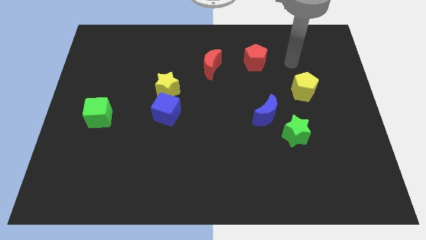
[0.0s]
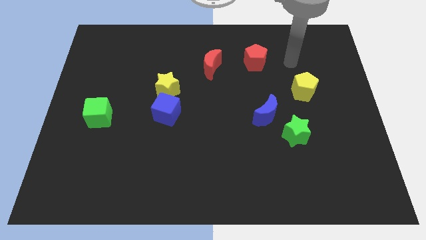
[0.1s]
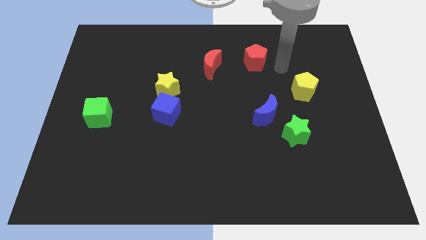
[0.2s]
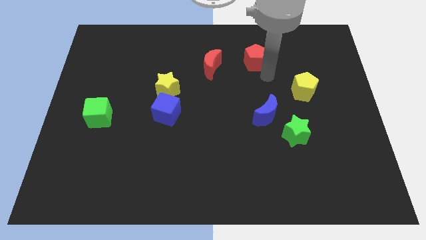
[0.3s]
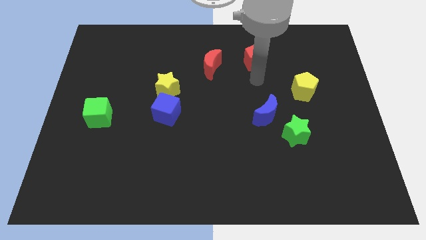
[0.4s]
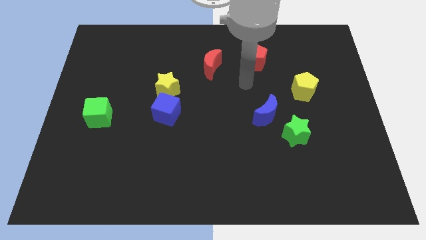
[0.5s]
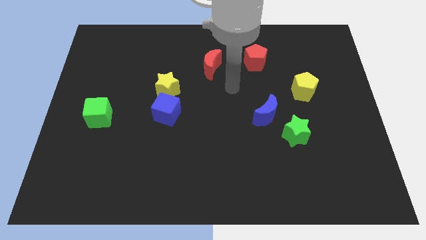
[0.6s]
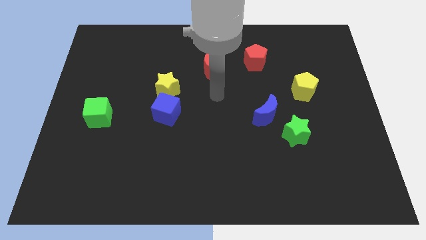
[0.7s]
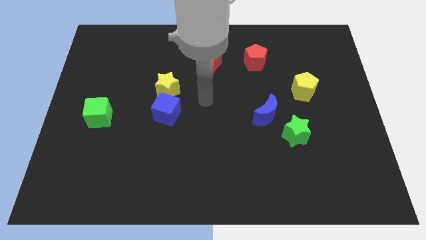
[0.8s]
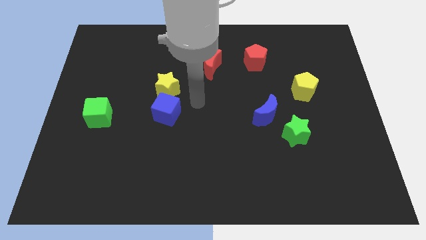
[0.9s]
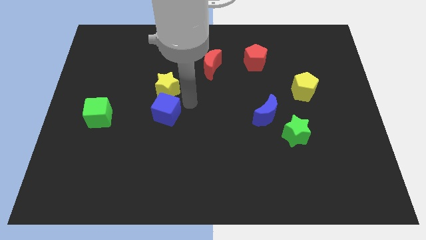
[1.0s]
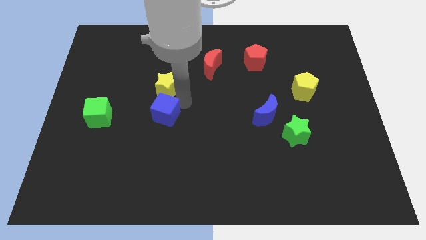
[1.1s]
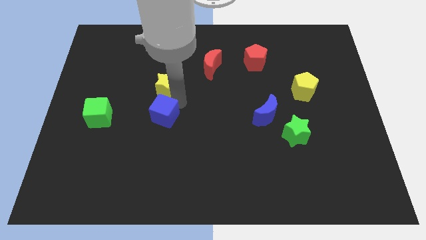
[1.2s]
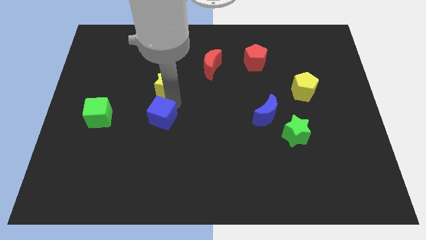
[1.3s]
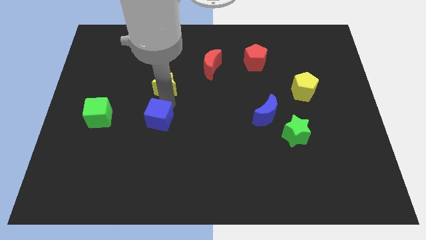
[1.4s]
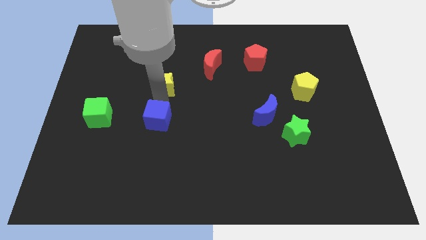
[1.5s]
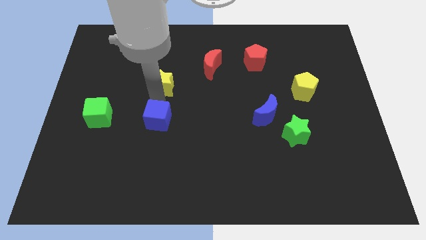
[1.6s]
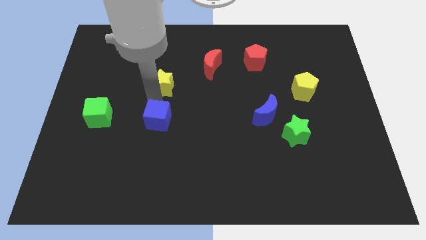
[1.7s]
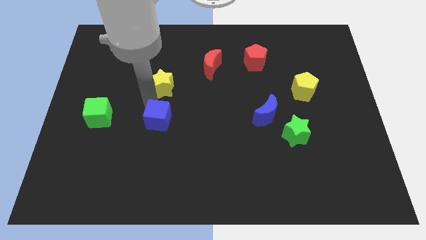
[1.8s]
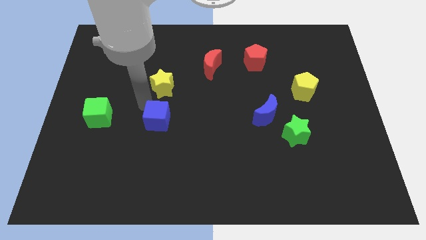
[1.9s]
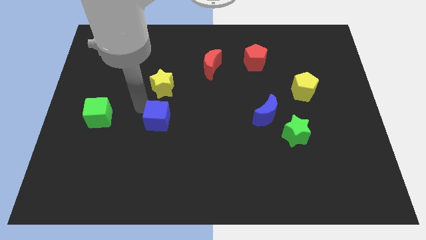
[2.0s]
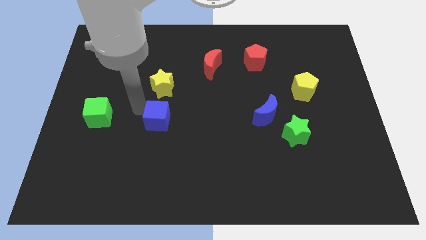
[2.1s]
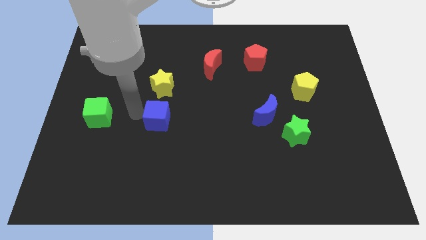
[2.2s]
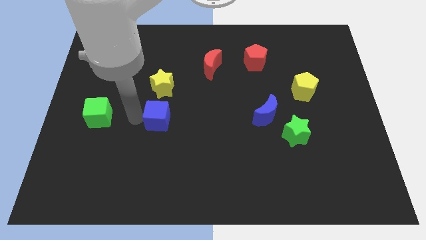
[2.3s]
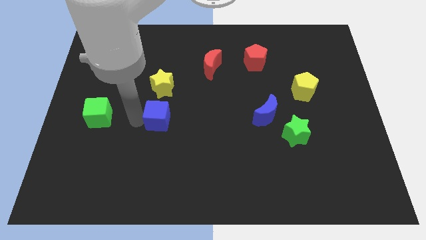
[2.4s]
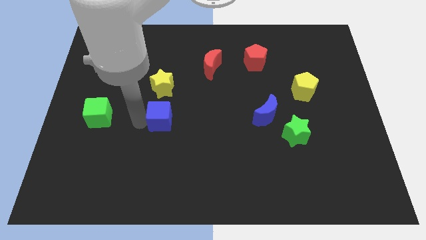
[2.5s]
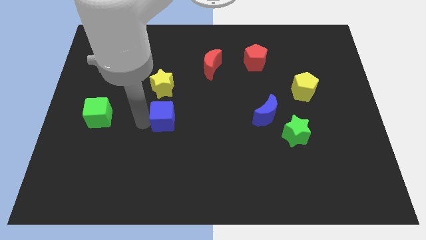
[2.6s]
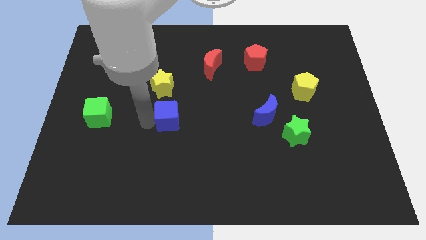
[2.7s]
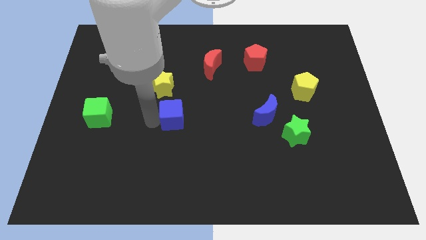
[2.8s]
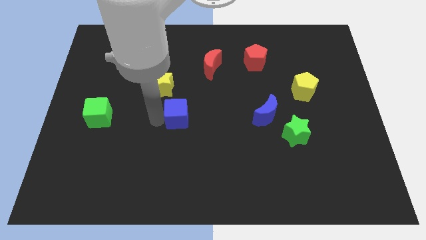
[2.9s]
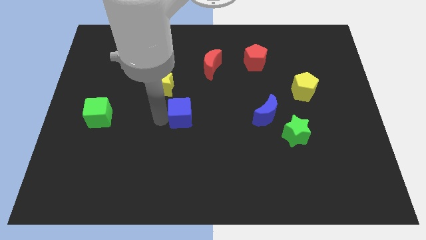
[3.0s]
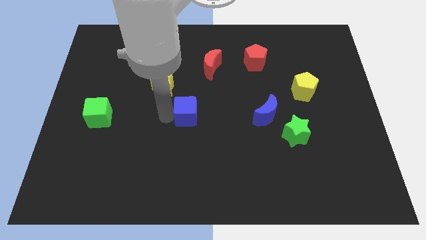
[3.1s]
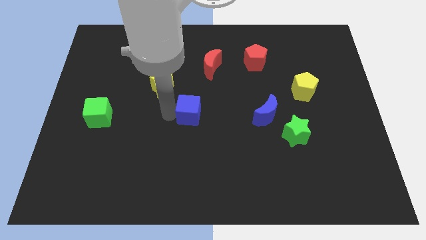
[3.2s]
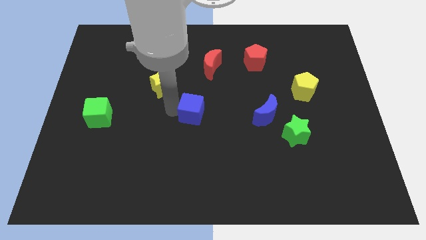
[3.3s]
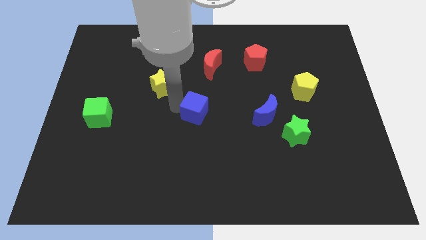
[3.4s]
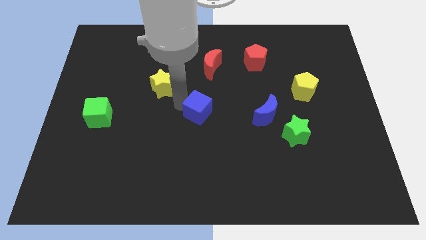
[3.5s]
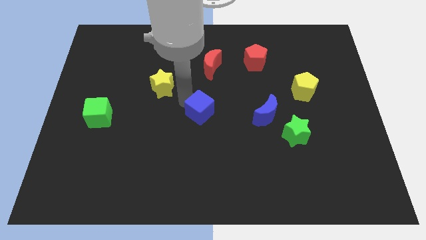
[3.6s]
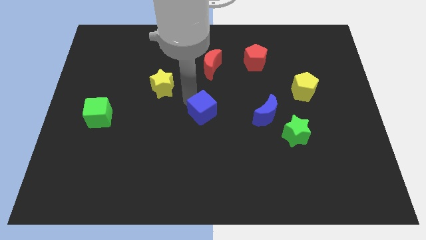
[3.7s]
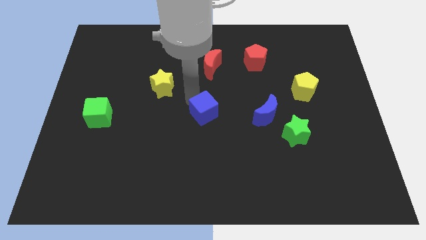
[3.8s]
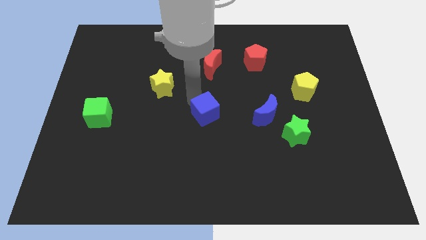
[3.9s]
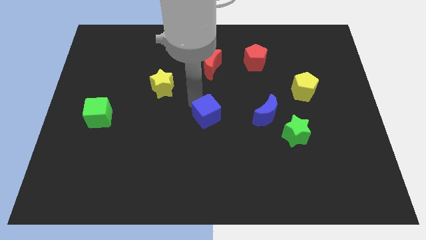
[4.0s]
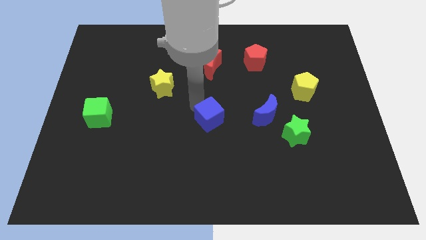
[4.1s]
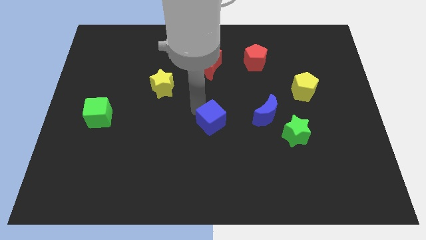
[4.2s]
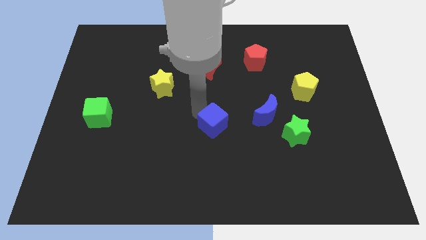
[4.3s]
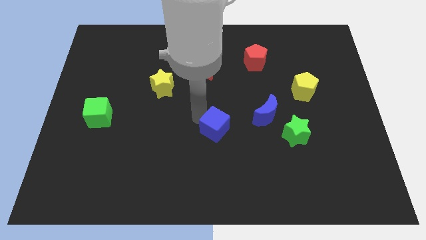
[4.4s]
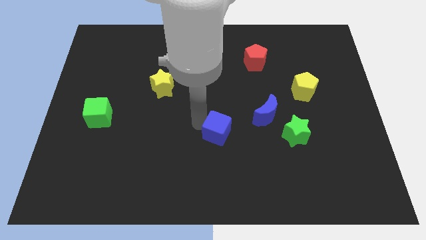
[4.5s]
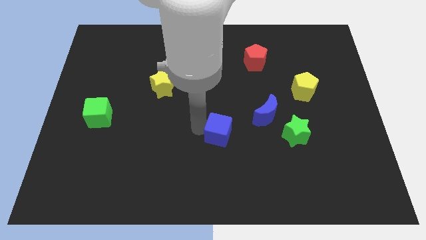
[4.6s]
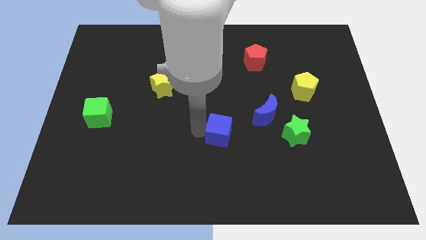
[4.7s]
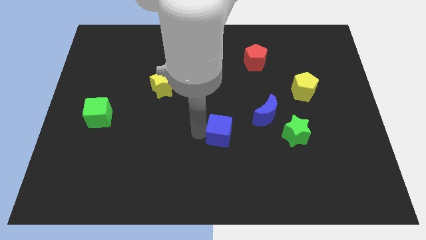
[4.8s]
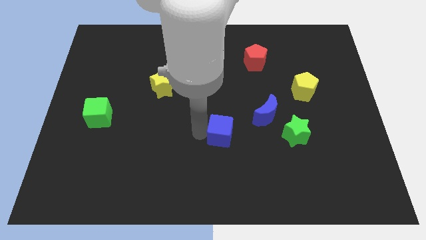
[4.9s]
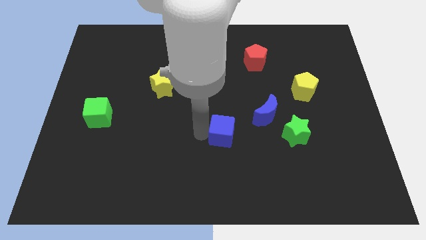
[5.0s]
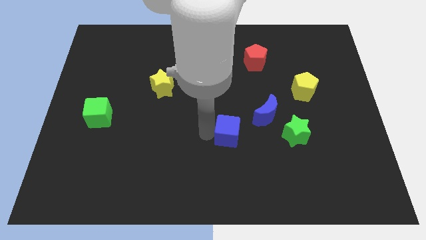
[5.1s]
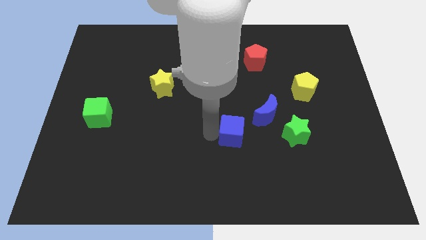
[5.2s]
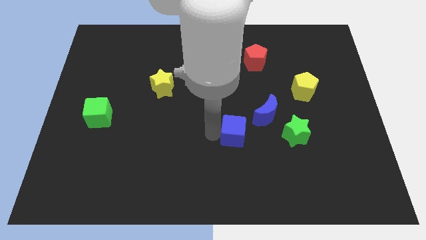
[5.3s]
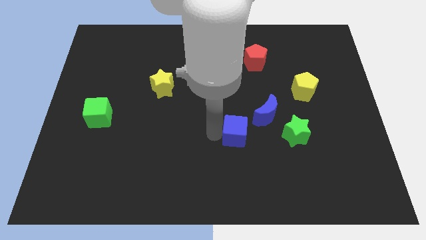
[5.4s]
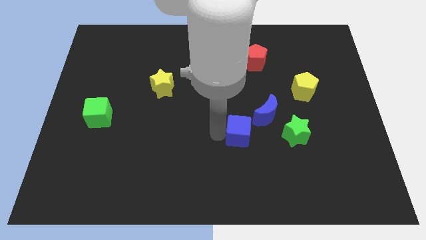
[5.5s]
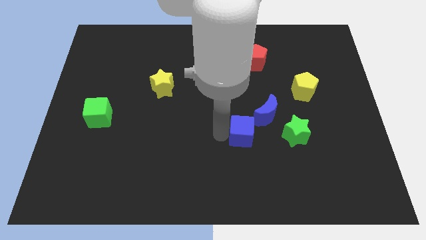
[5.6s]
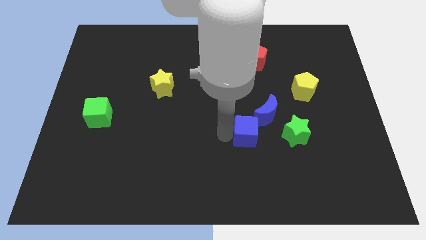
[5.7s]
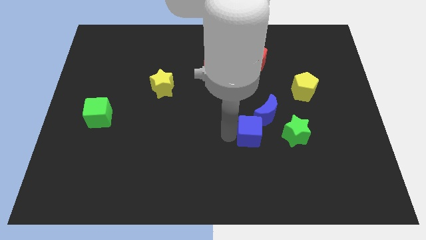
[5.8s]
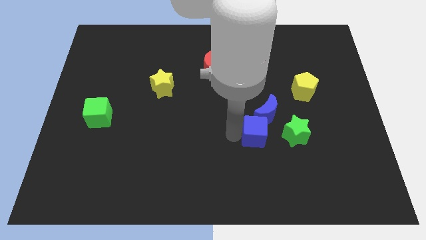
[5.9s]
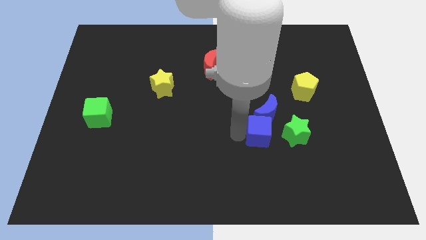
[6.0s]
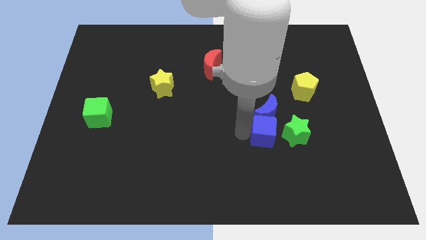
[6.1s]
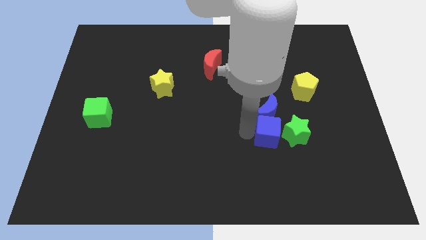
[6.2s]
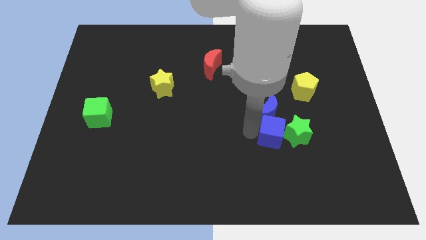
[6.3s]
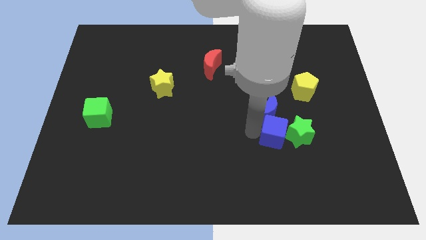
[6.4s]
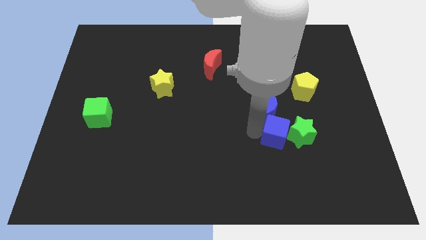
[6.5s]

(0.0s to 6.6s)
put the blue cube next to the green star

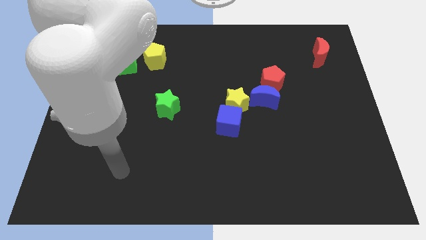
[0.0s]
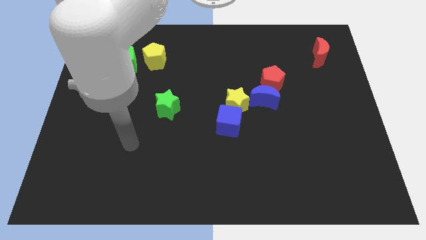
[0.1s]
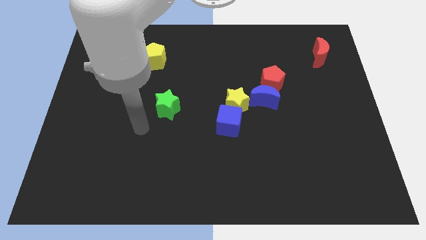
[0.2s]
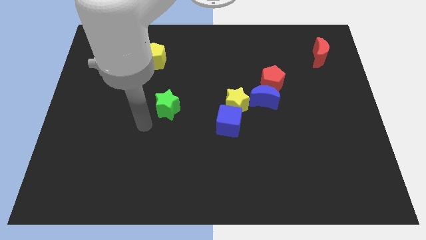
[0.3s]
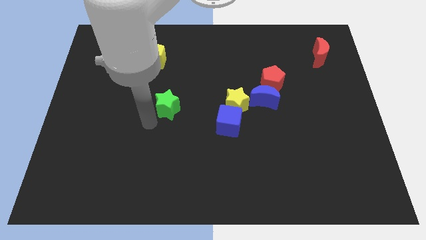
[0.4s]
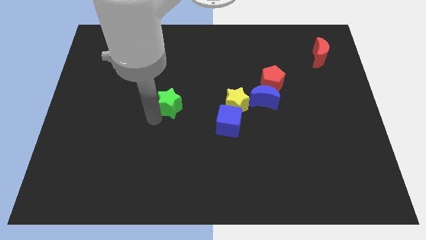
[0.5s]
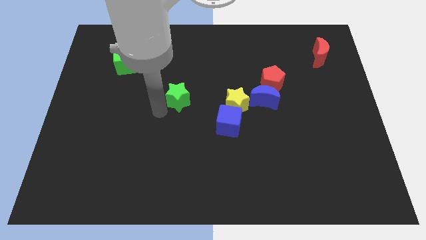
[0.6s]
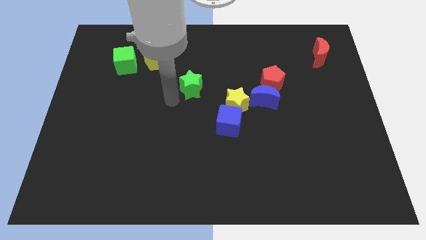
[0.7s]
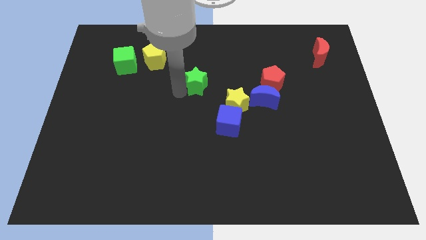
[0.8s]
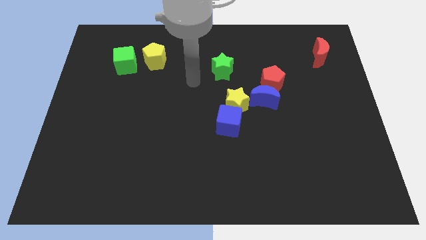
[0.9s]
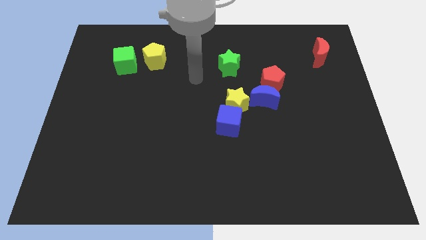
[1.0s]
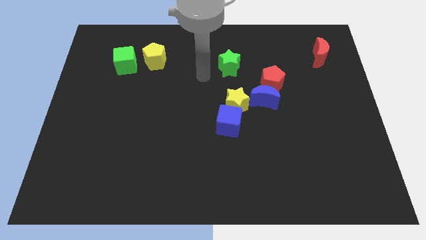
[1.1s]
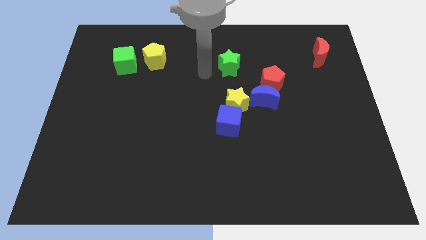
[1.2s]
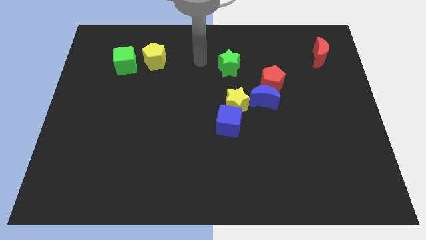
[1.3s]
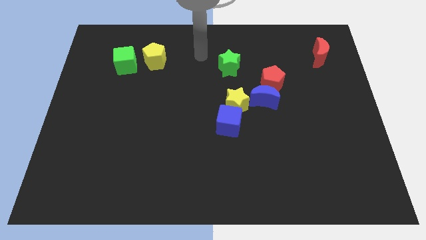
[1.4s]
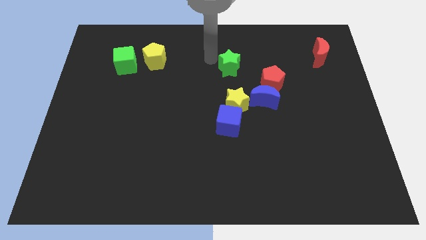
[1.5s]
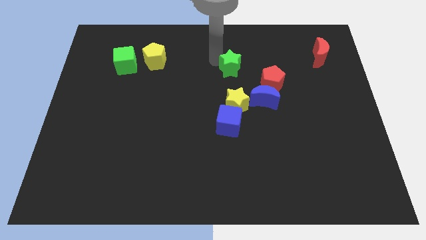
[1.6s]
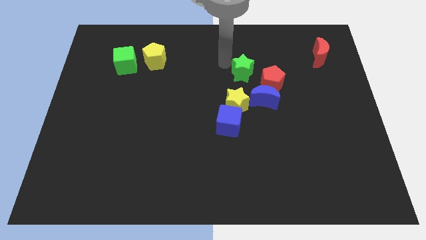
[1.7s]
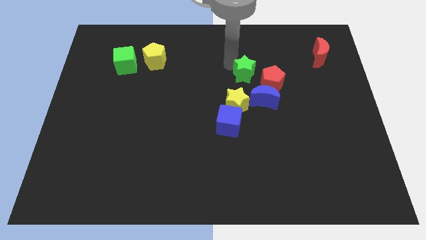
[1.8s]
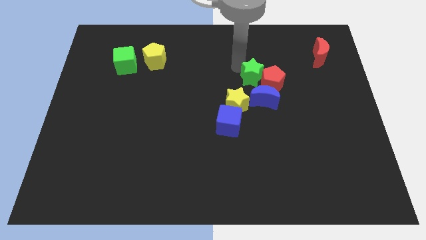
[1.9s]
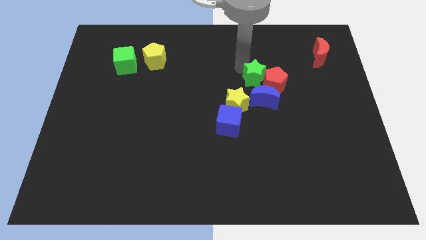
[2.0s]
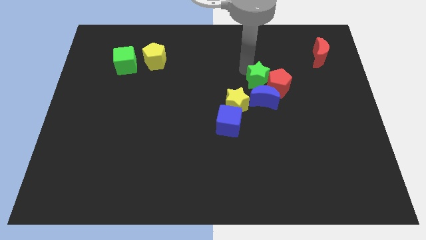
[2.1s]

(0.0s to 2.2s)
put the green star to the red pentagon
